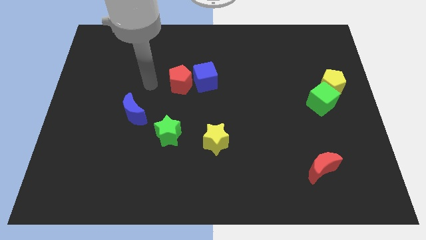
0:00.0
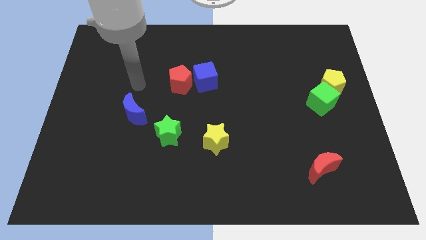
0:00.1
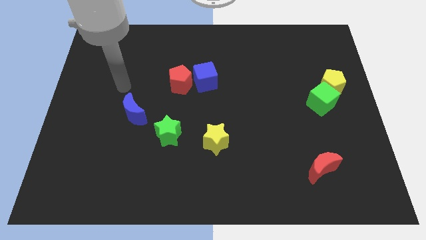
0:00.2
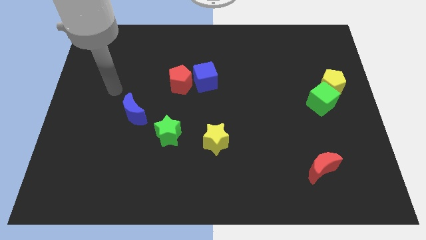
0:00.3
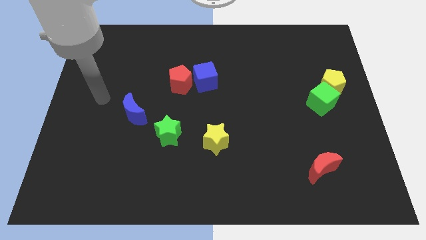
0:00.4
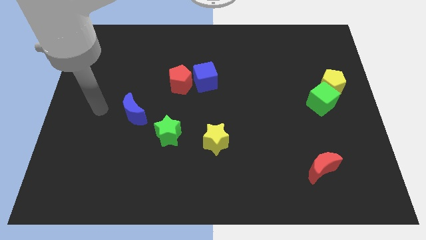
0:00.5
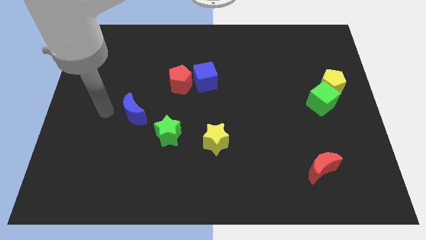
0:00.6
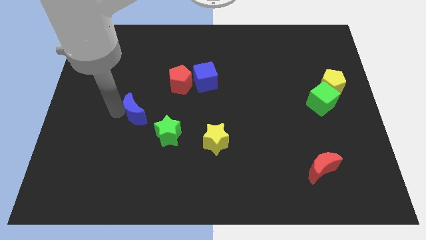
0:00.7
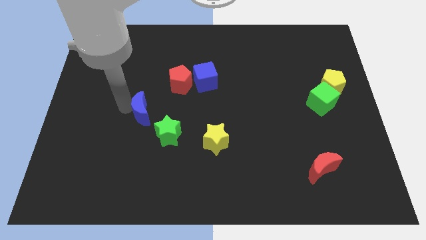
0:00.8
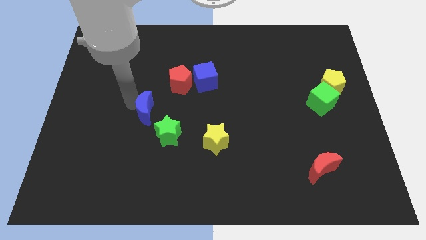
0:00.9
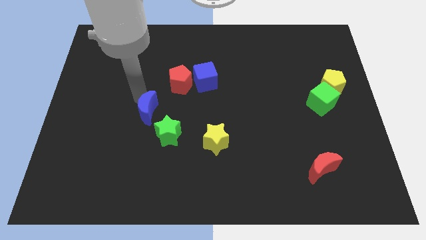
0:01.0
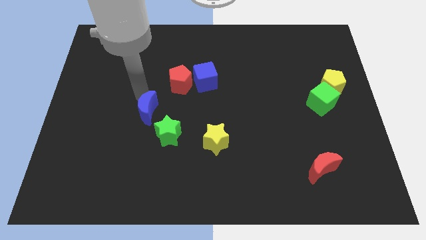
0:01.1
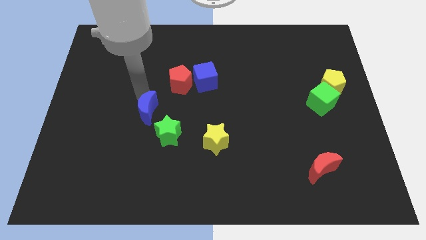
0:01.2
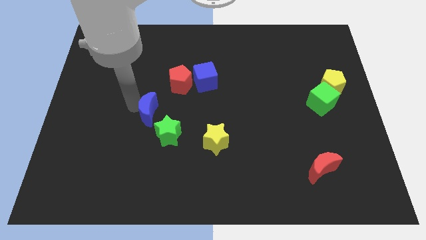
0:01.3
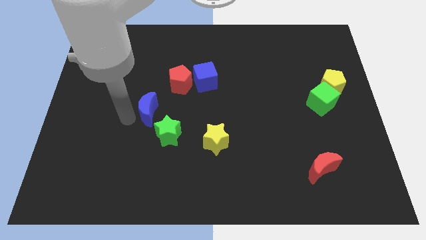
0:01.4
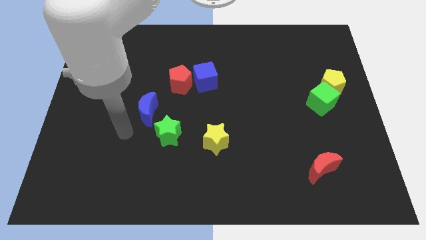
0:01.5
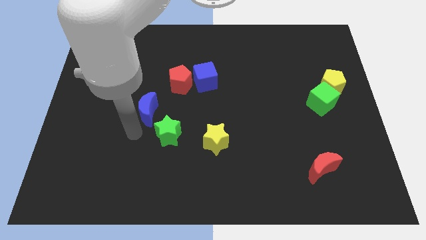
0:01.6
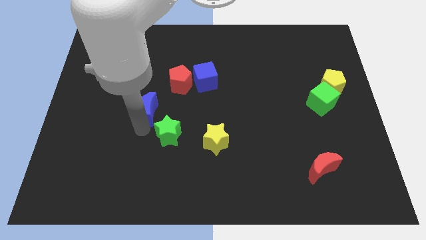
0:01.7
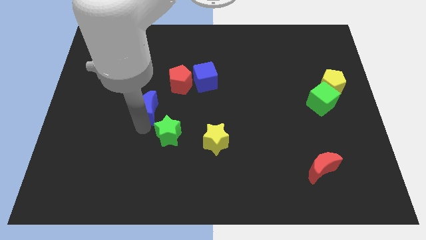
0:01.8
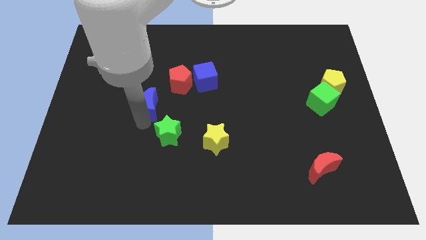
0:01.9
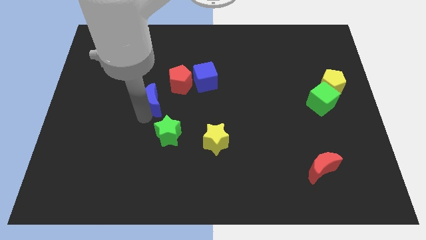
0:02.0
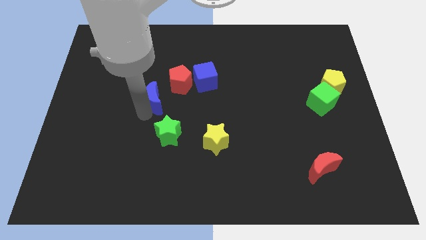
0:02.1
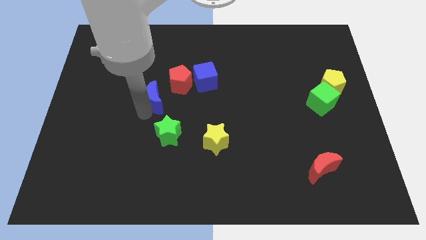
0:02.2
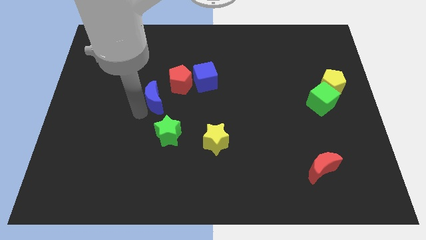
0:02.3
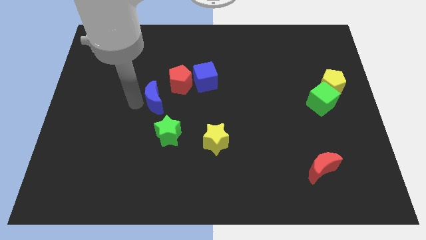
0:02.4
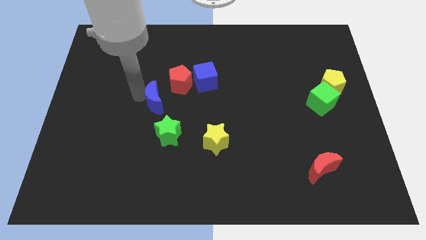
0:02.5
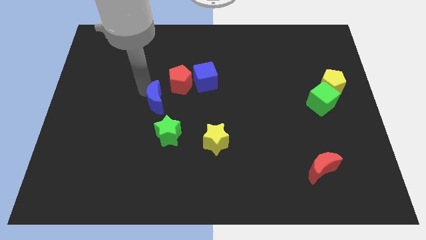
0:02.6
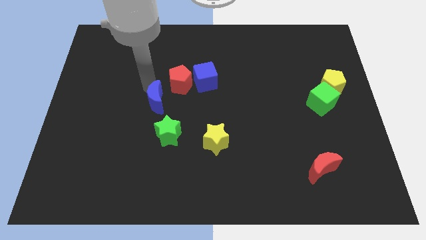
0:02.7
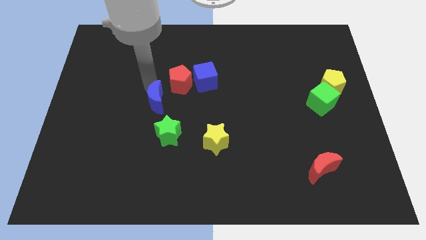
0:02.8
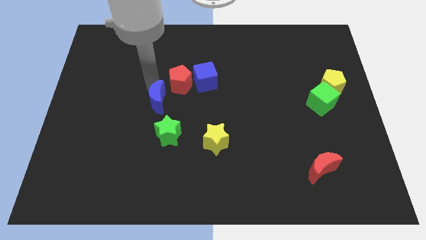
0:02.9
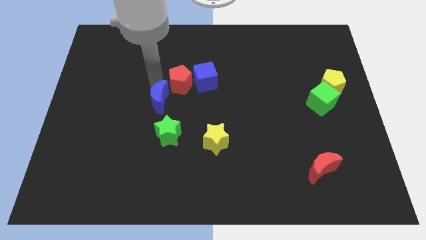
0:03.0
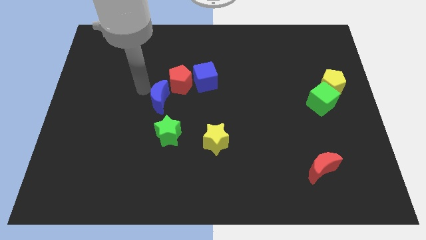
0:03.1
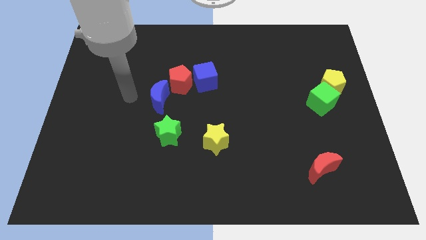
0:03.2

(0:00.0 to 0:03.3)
move blue crescent towards the left bottom of the red pentagon

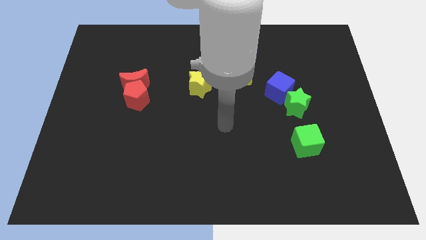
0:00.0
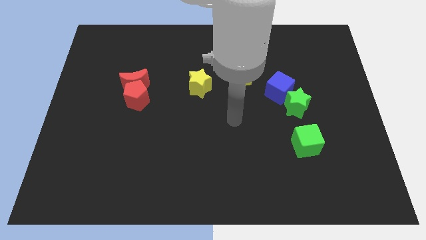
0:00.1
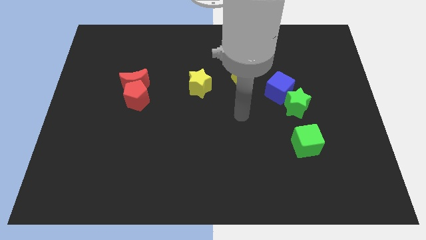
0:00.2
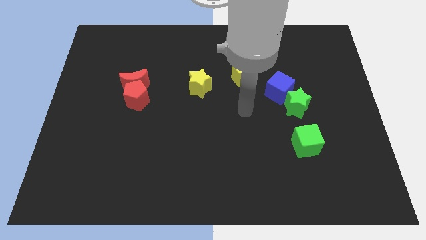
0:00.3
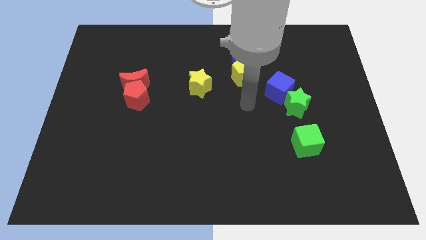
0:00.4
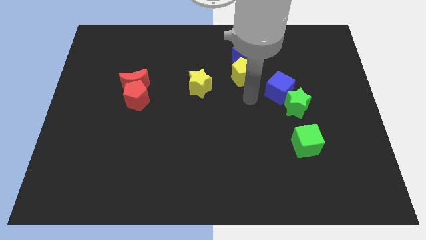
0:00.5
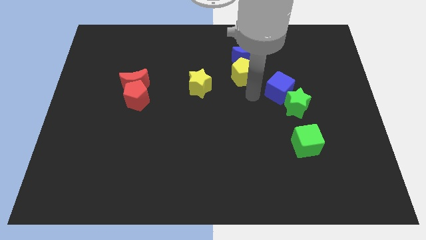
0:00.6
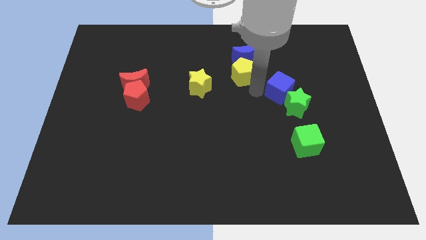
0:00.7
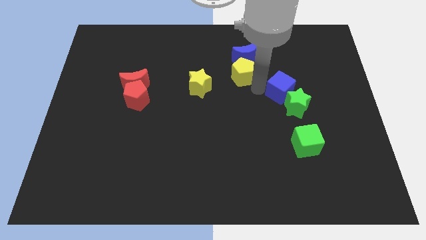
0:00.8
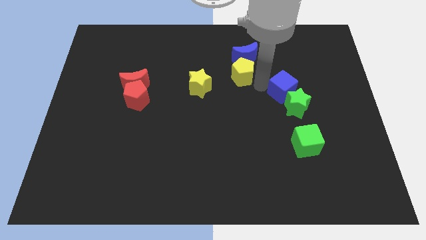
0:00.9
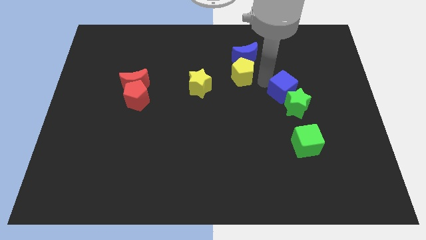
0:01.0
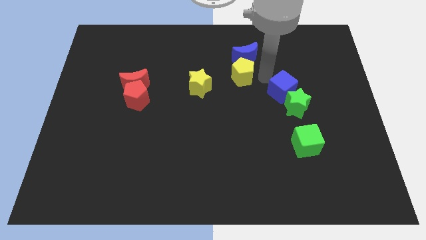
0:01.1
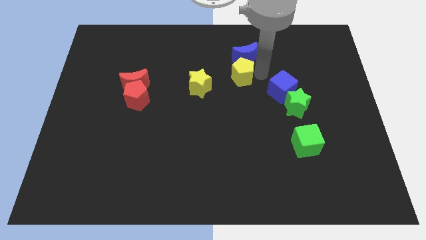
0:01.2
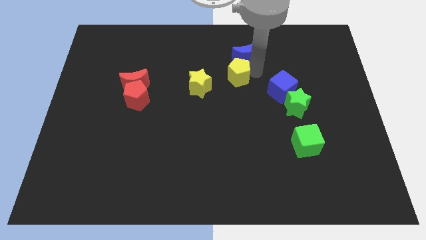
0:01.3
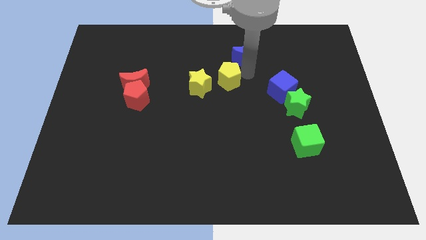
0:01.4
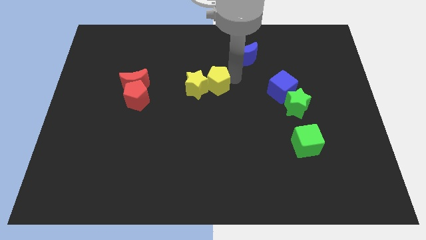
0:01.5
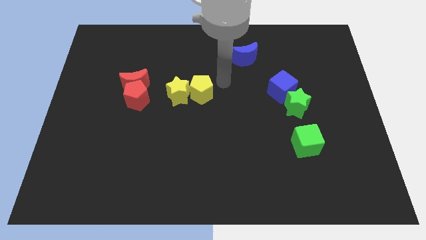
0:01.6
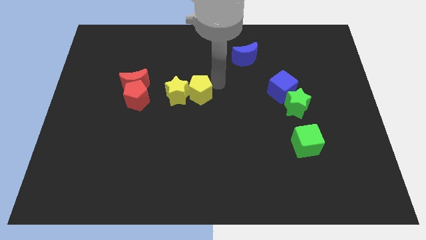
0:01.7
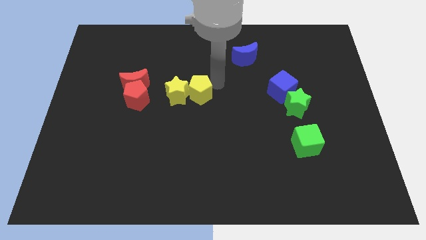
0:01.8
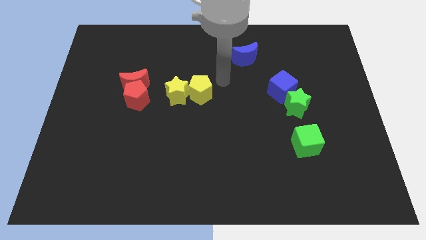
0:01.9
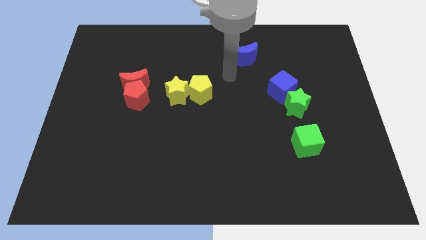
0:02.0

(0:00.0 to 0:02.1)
move yellow pentagon close to yellow star

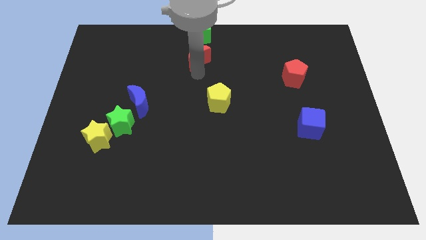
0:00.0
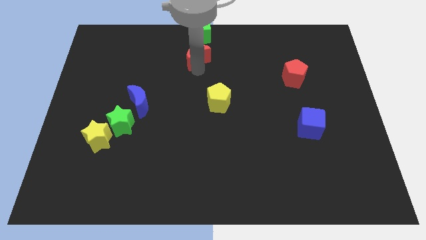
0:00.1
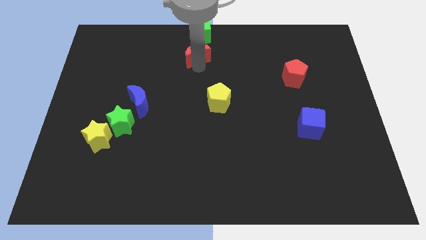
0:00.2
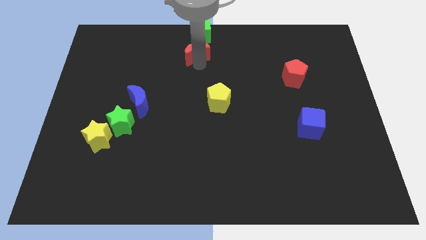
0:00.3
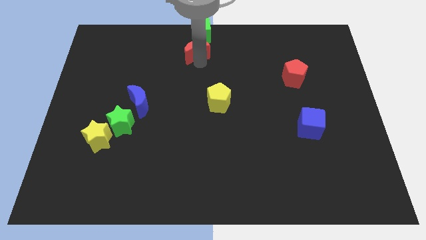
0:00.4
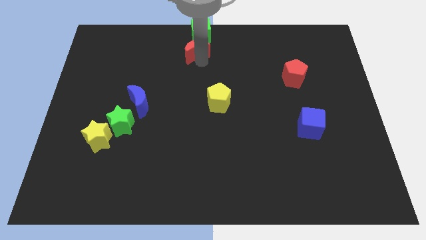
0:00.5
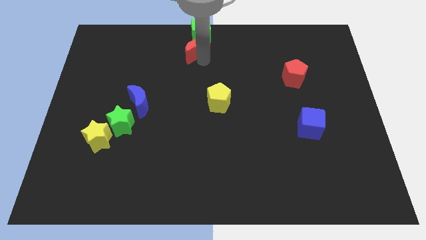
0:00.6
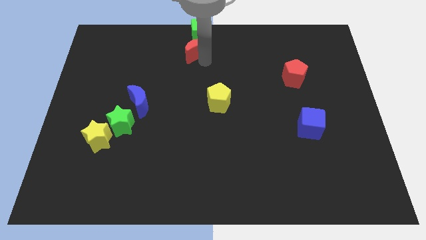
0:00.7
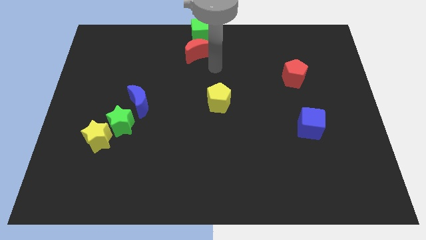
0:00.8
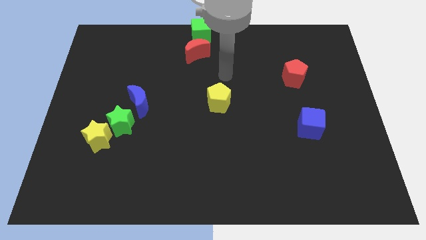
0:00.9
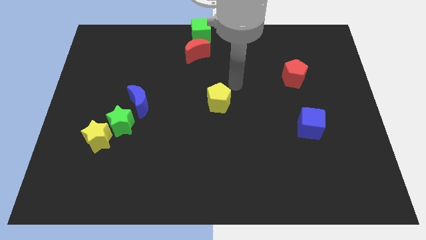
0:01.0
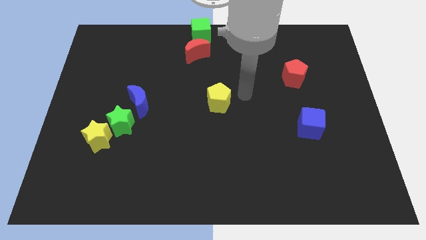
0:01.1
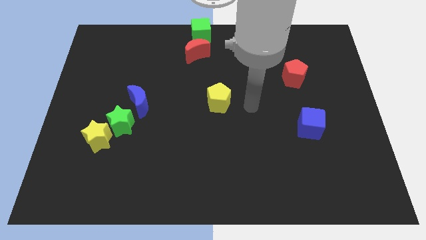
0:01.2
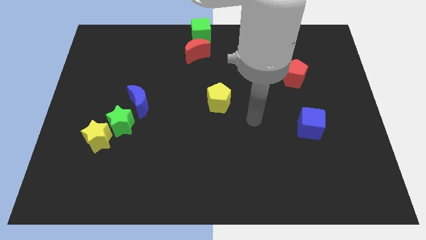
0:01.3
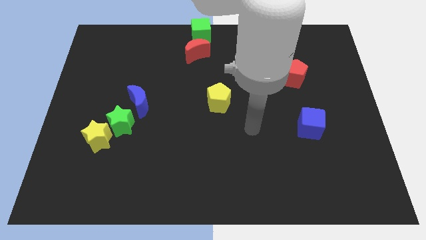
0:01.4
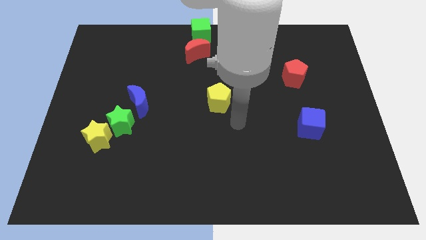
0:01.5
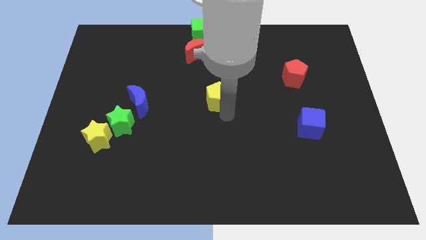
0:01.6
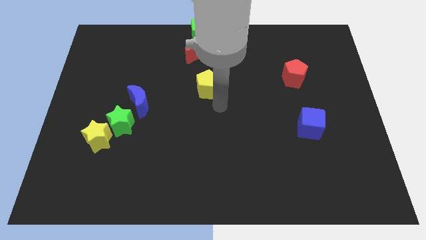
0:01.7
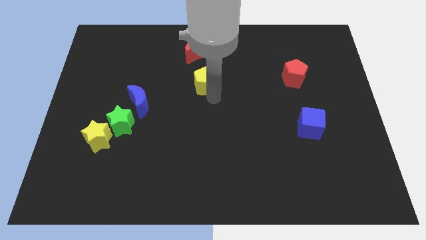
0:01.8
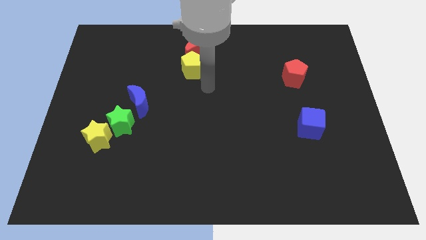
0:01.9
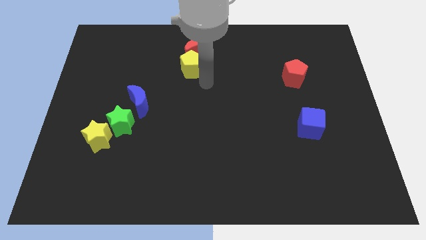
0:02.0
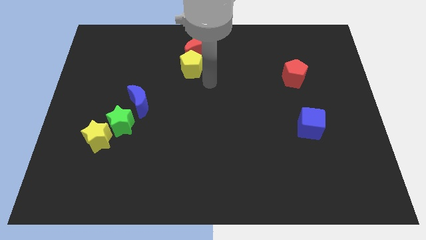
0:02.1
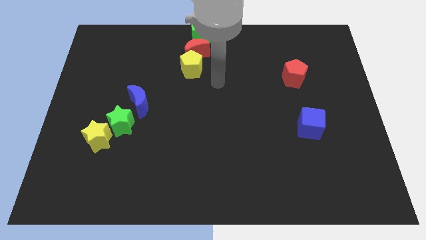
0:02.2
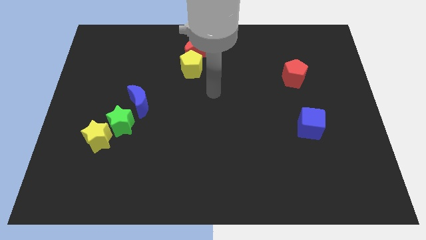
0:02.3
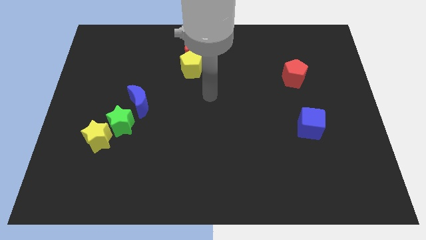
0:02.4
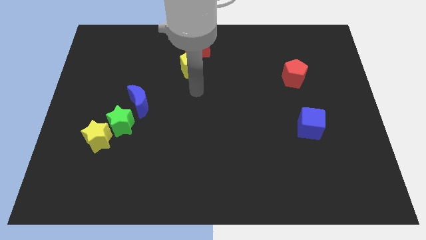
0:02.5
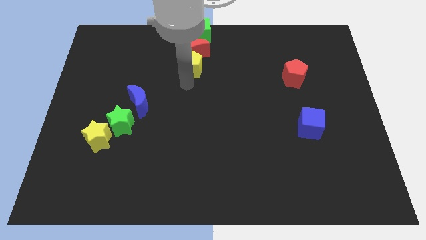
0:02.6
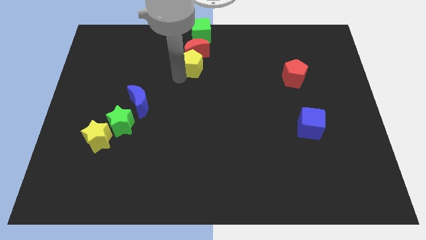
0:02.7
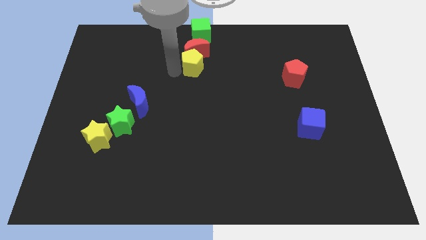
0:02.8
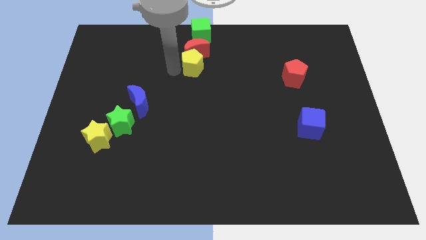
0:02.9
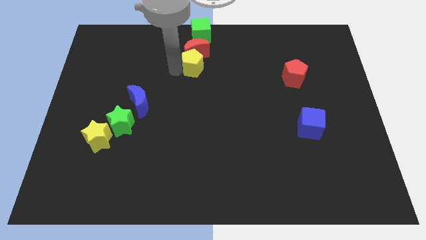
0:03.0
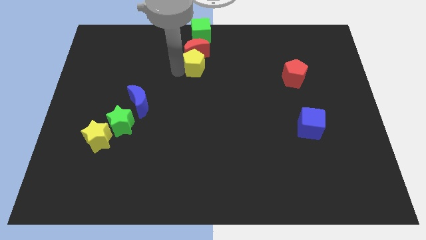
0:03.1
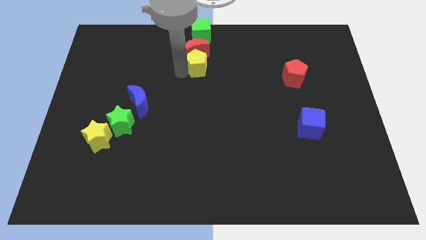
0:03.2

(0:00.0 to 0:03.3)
move the yellow pentagon towards the bottom of the red crescent

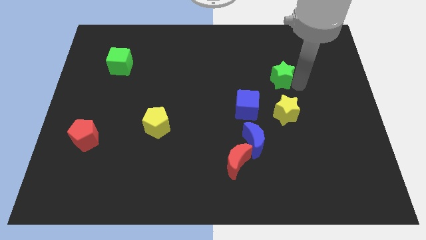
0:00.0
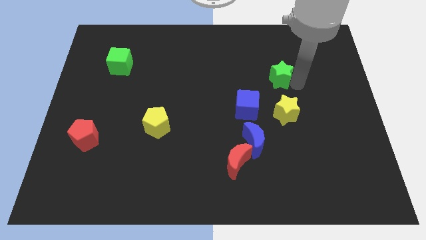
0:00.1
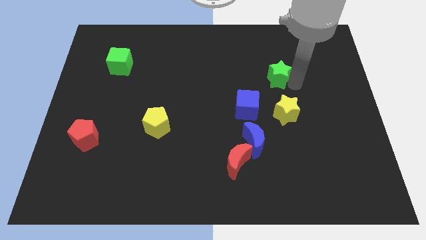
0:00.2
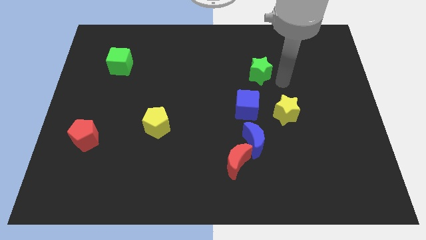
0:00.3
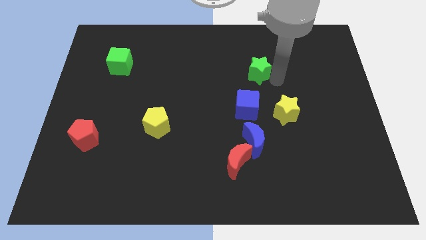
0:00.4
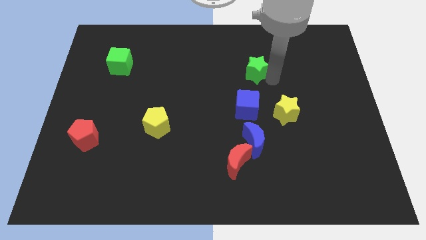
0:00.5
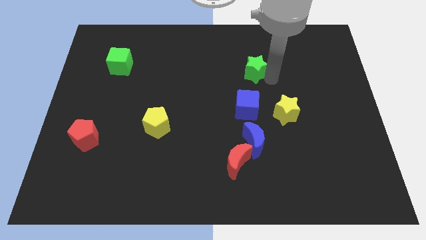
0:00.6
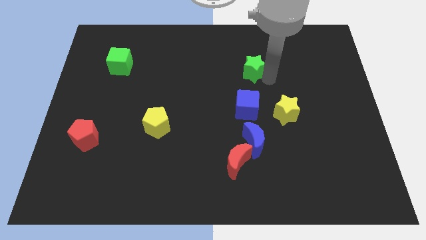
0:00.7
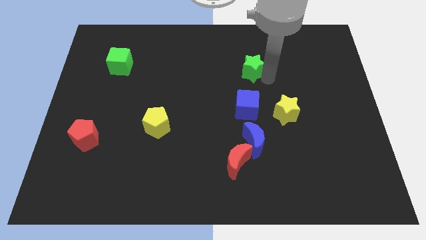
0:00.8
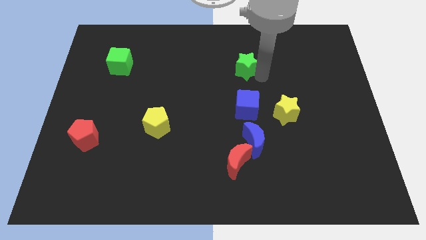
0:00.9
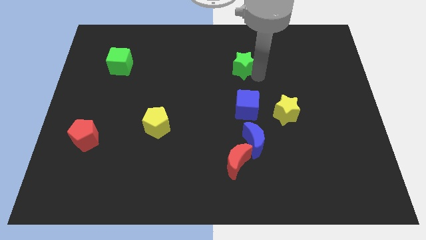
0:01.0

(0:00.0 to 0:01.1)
place green star on top of blue cube
